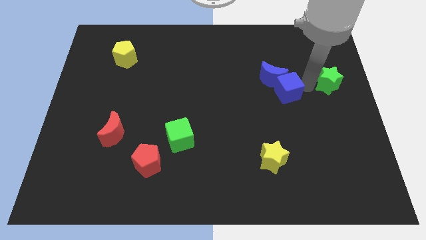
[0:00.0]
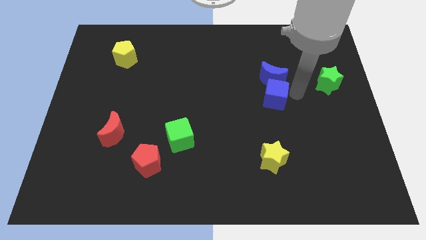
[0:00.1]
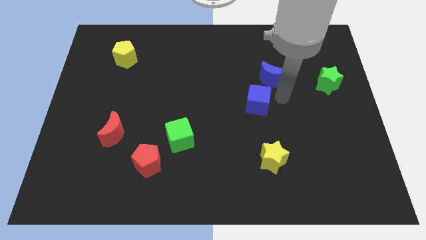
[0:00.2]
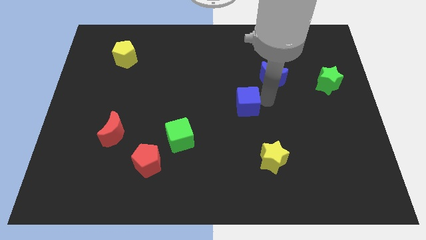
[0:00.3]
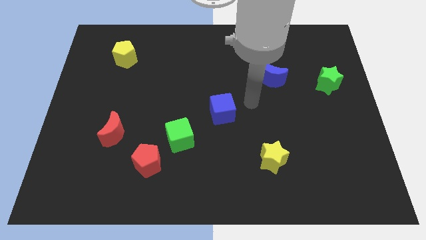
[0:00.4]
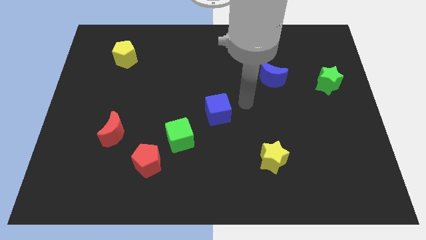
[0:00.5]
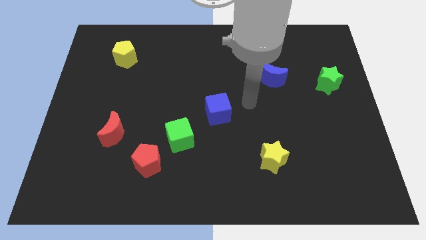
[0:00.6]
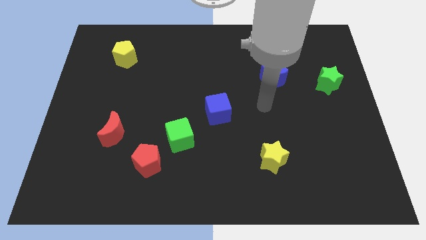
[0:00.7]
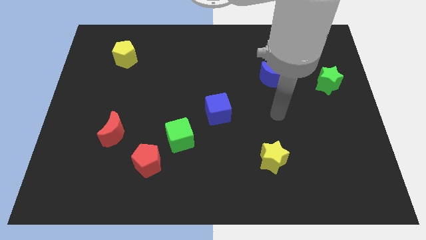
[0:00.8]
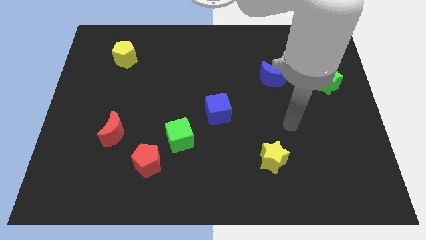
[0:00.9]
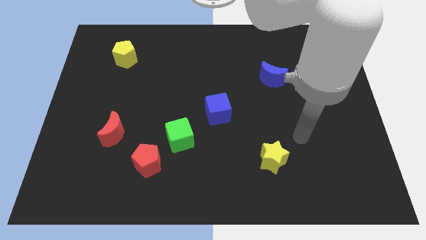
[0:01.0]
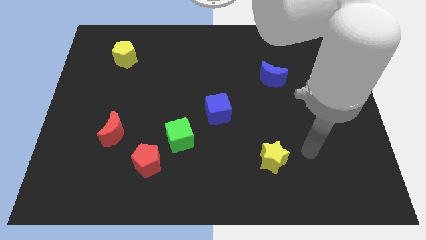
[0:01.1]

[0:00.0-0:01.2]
push the blue cube to the center of the board

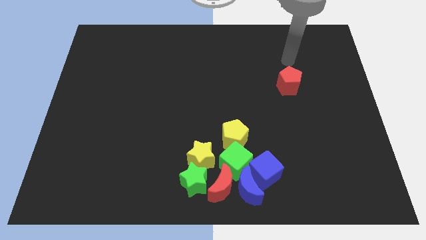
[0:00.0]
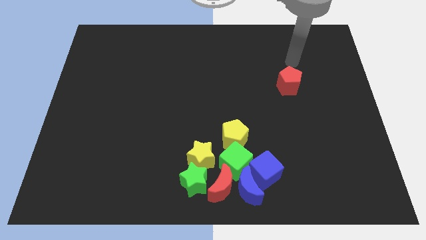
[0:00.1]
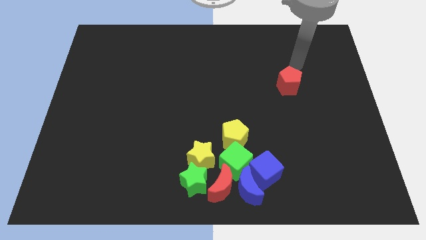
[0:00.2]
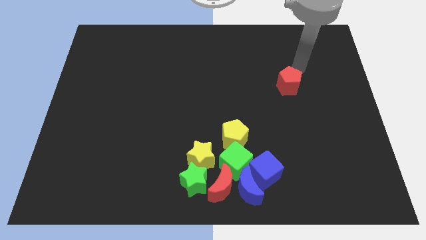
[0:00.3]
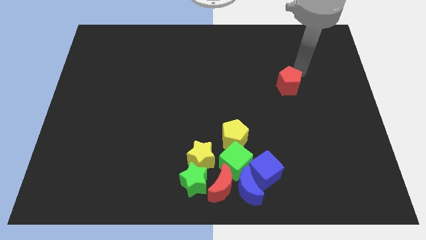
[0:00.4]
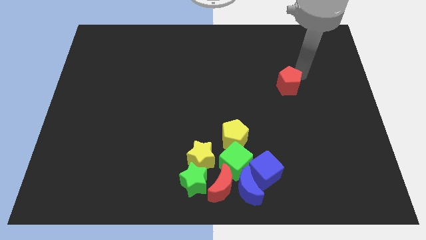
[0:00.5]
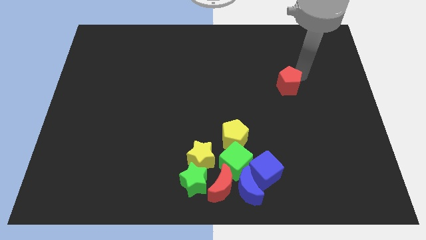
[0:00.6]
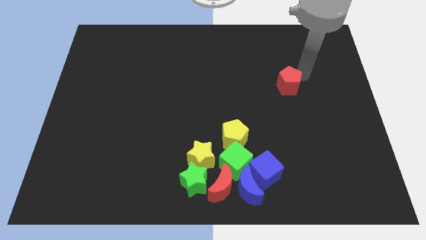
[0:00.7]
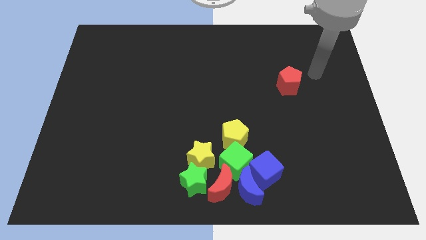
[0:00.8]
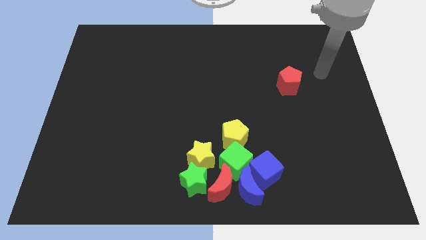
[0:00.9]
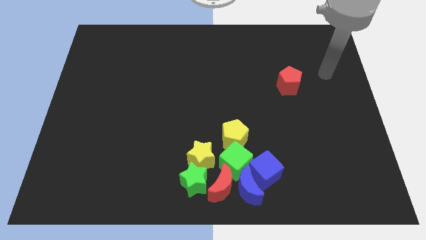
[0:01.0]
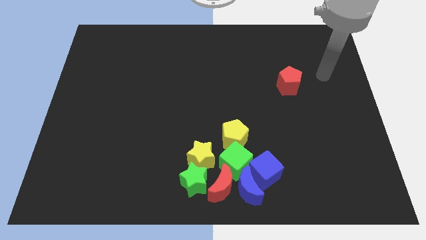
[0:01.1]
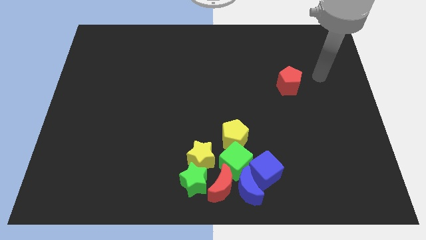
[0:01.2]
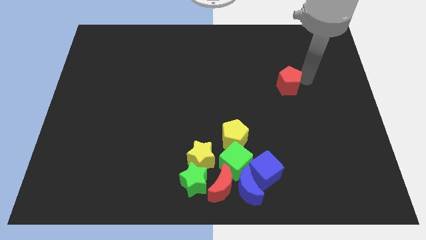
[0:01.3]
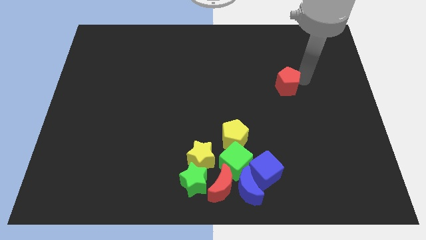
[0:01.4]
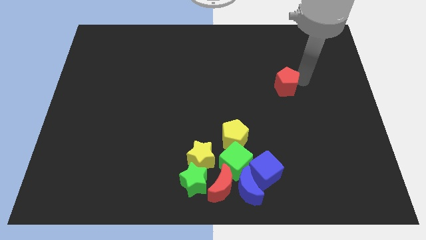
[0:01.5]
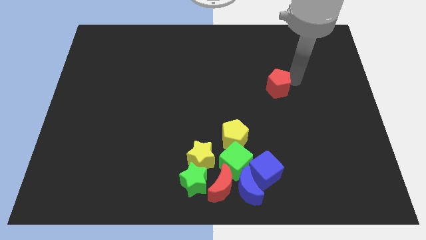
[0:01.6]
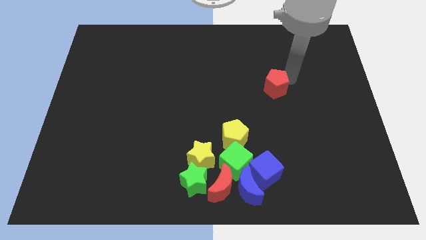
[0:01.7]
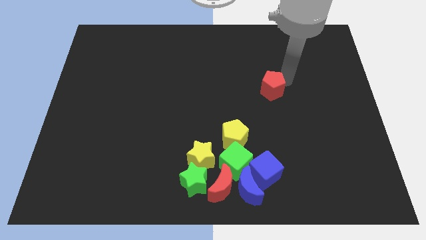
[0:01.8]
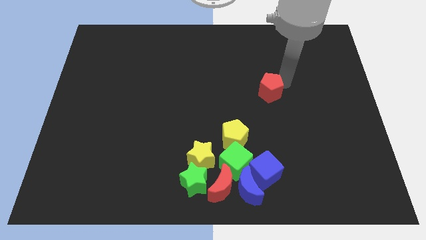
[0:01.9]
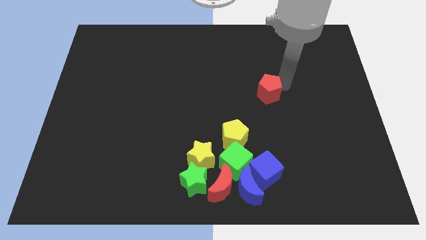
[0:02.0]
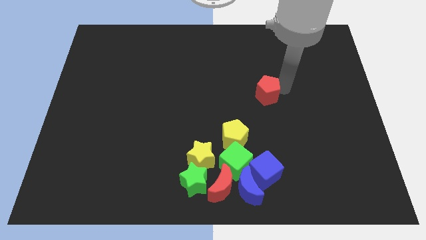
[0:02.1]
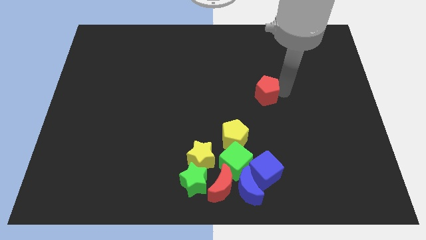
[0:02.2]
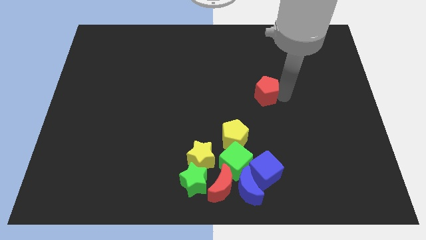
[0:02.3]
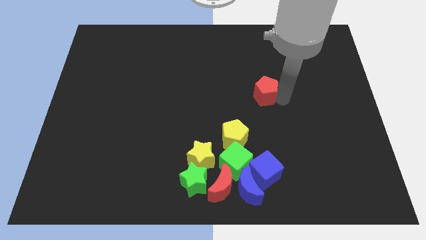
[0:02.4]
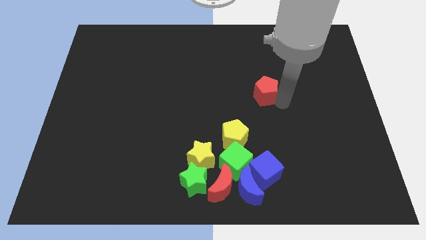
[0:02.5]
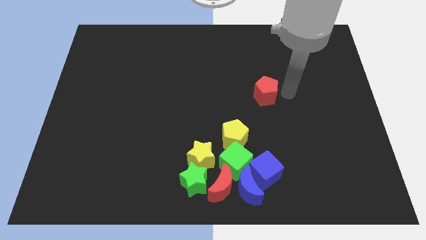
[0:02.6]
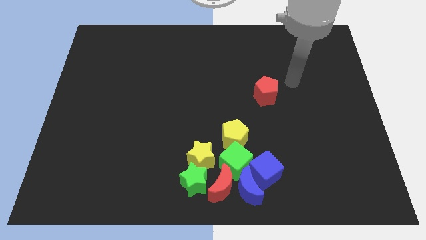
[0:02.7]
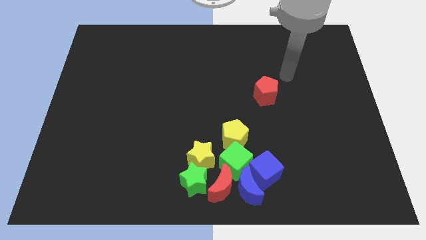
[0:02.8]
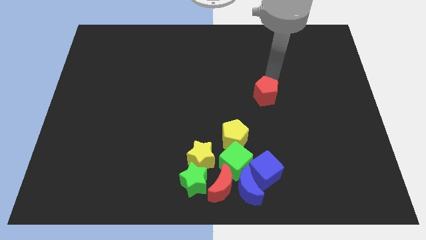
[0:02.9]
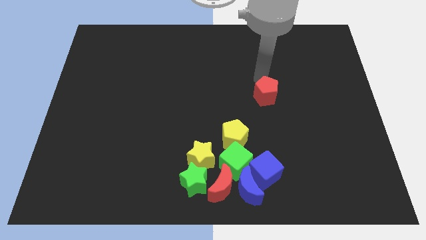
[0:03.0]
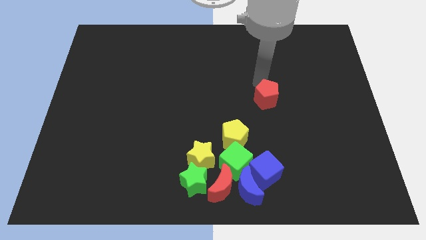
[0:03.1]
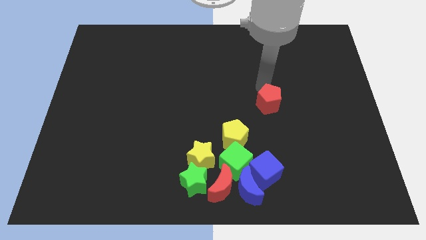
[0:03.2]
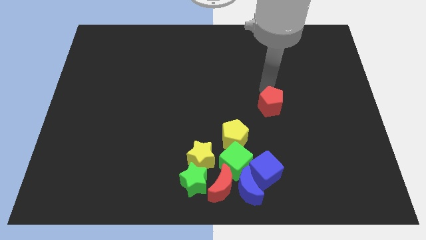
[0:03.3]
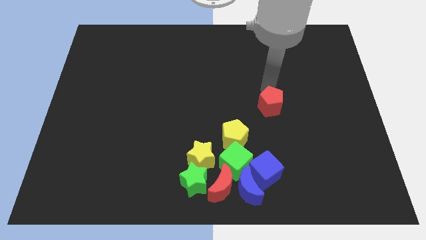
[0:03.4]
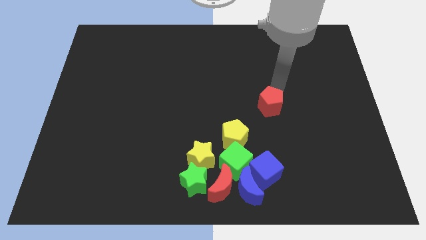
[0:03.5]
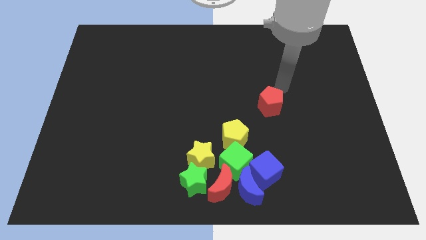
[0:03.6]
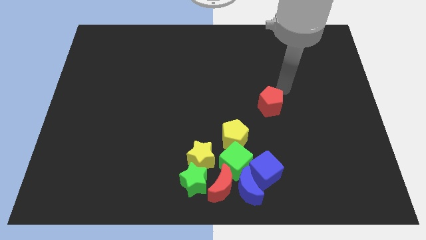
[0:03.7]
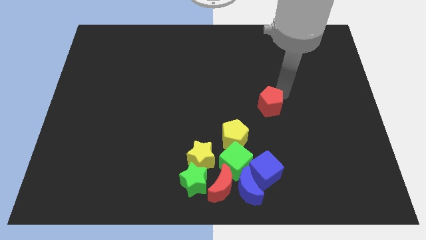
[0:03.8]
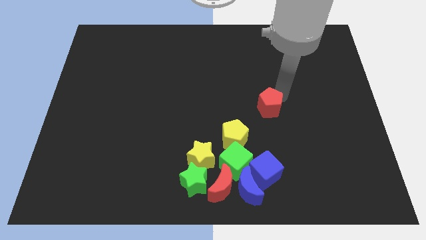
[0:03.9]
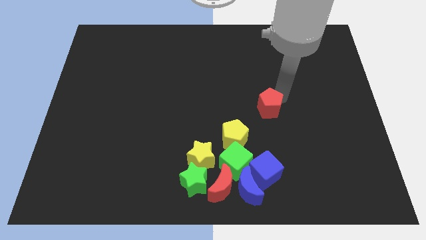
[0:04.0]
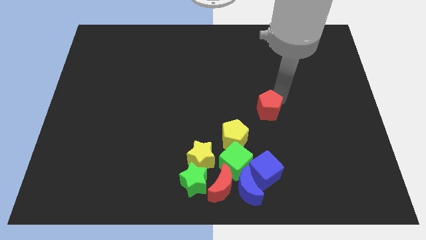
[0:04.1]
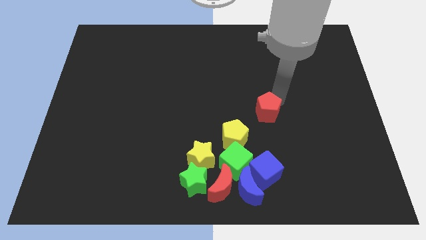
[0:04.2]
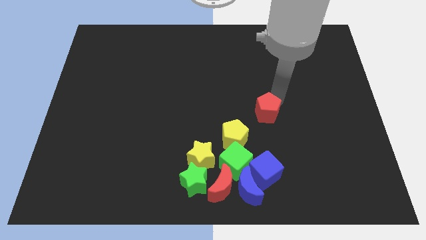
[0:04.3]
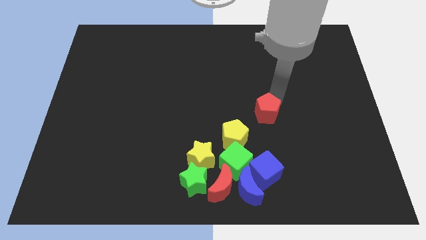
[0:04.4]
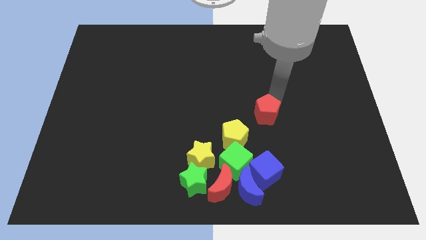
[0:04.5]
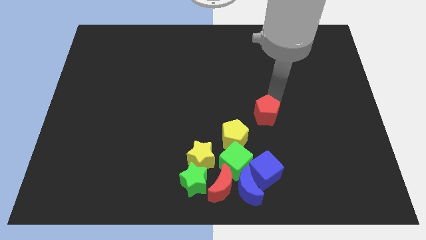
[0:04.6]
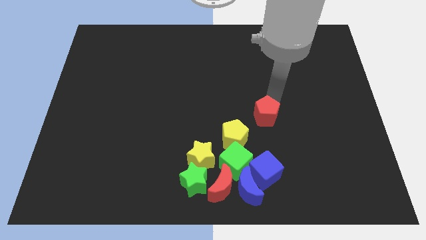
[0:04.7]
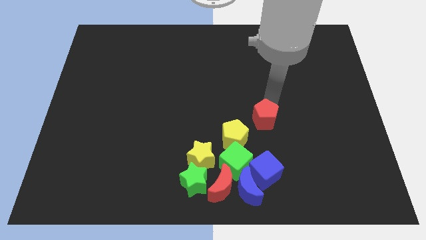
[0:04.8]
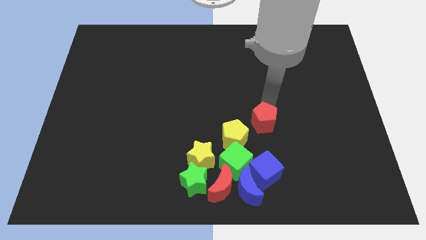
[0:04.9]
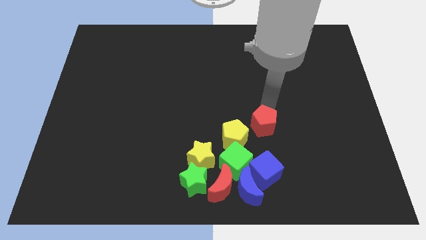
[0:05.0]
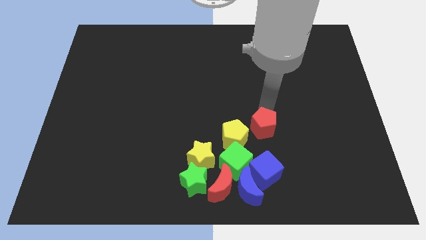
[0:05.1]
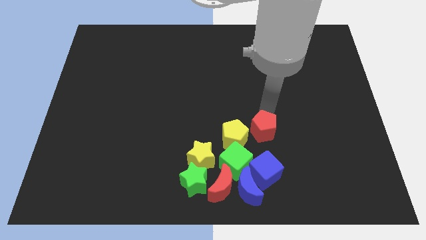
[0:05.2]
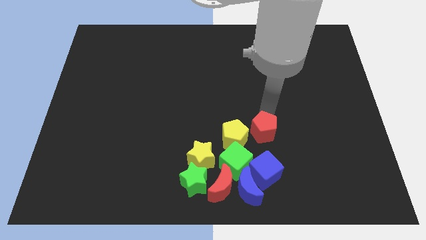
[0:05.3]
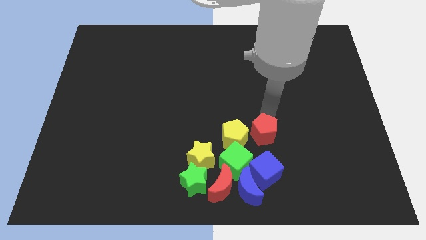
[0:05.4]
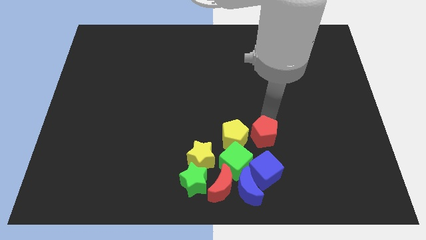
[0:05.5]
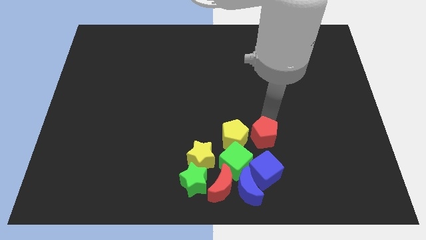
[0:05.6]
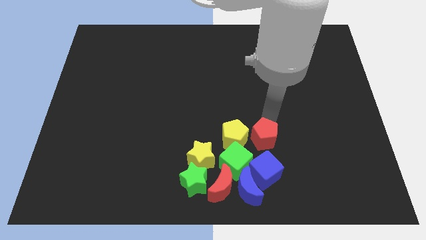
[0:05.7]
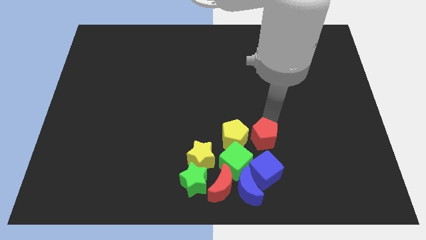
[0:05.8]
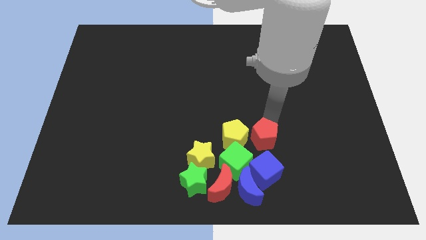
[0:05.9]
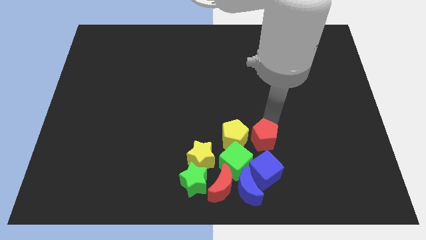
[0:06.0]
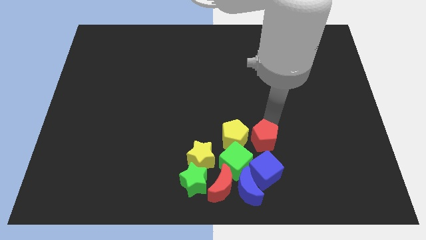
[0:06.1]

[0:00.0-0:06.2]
move the red pentagon above blue cube

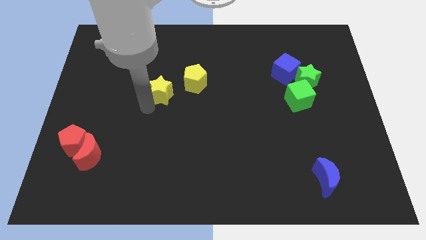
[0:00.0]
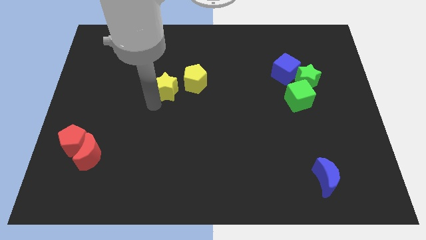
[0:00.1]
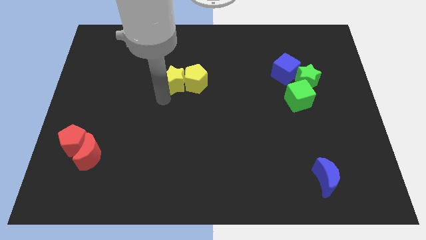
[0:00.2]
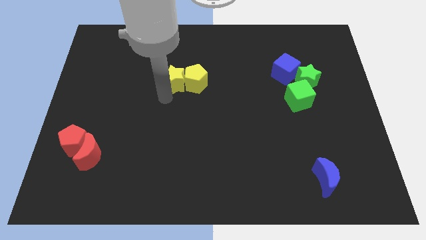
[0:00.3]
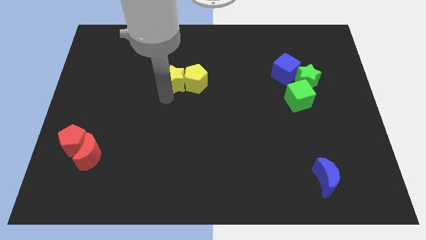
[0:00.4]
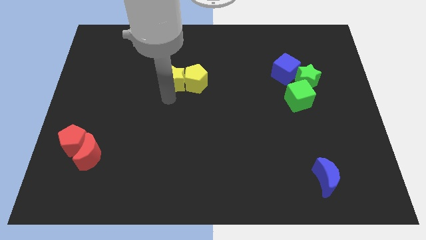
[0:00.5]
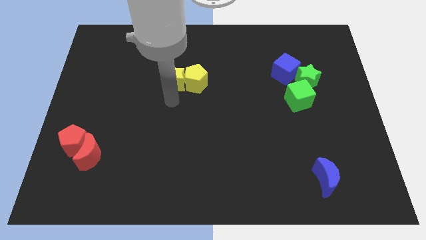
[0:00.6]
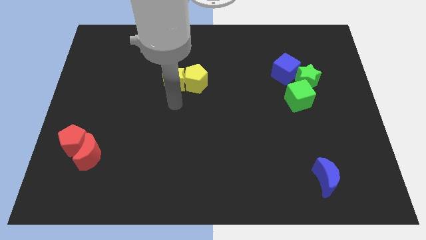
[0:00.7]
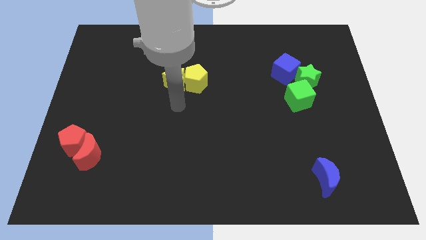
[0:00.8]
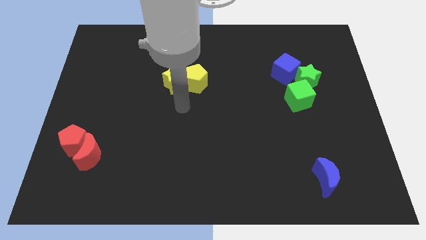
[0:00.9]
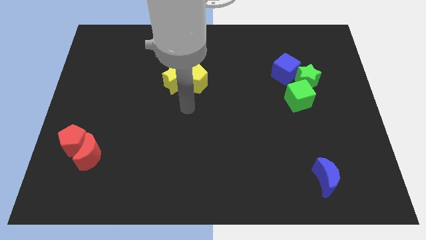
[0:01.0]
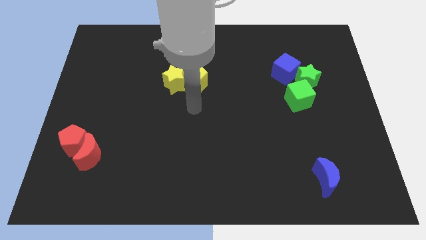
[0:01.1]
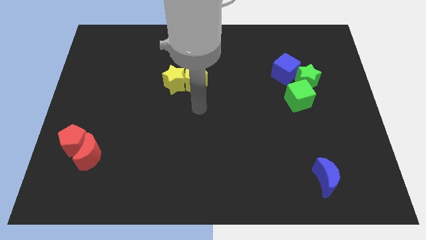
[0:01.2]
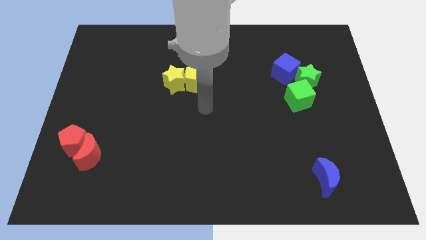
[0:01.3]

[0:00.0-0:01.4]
push the yellow star into the yellow pentagon
